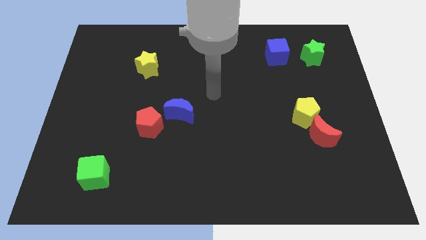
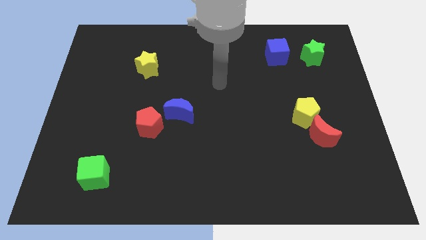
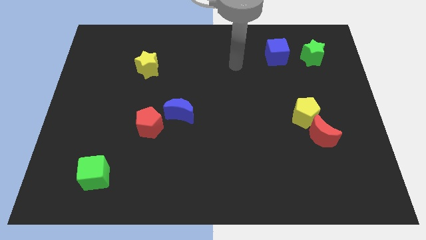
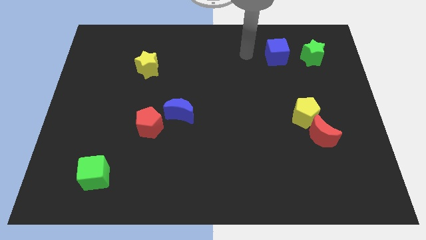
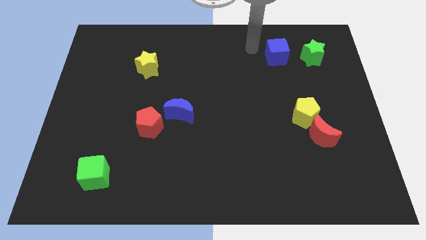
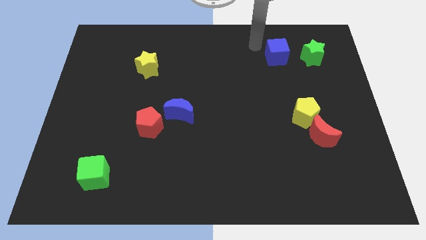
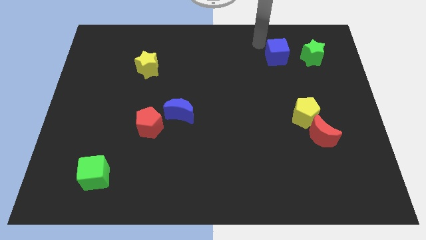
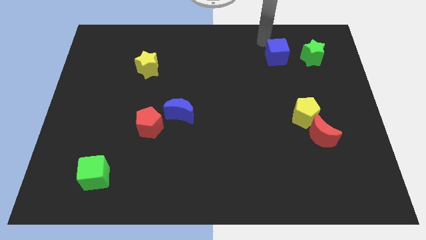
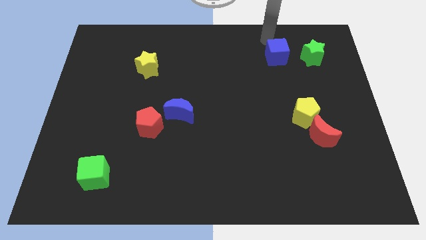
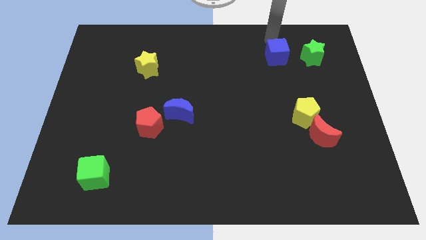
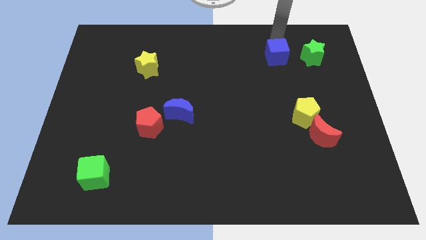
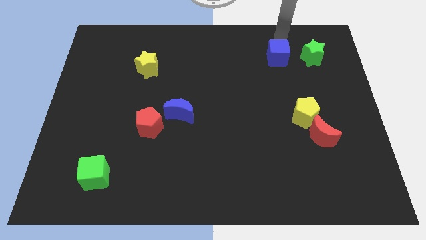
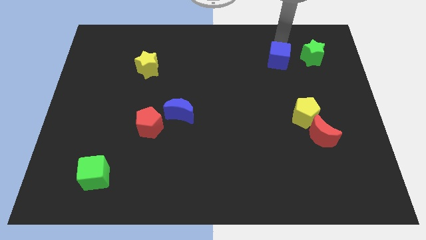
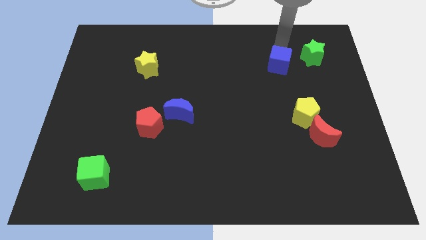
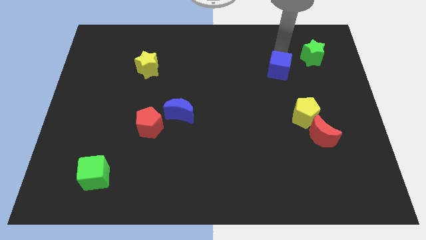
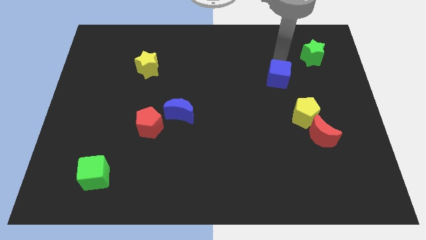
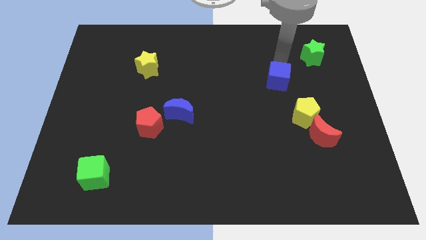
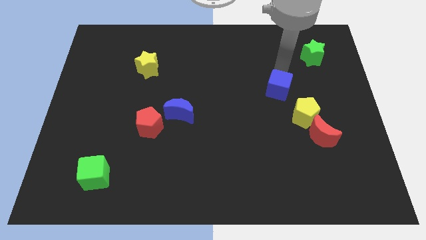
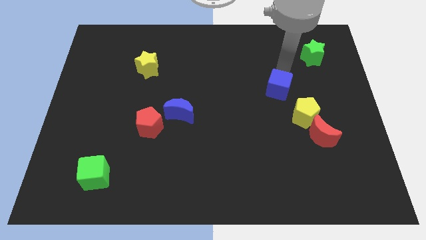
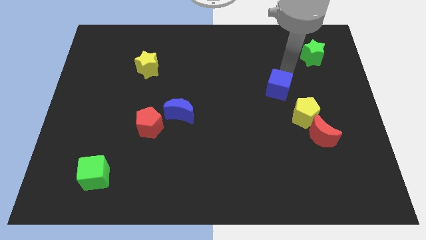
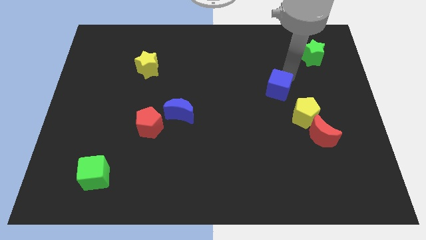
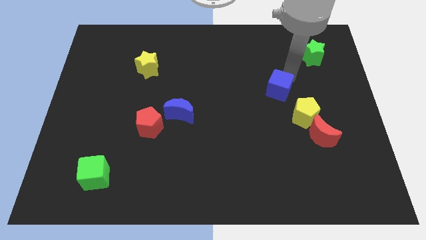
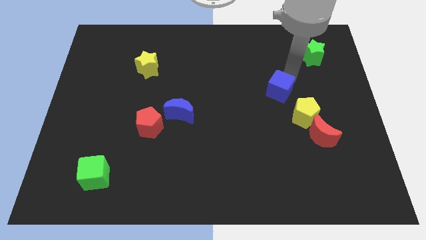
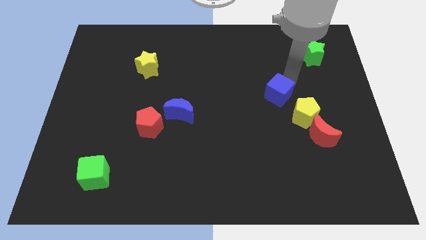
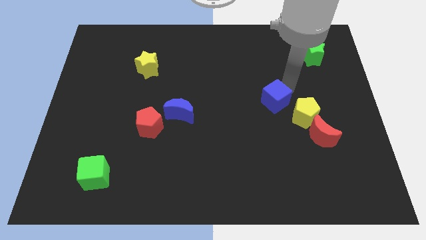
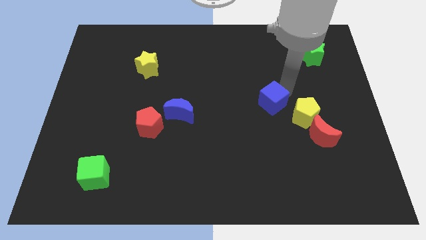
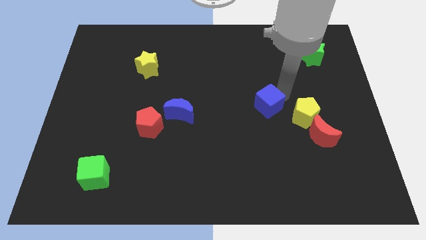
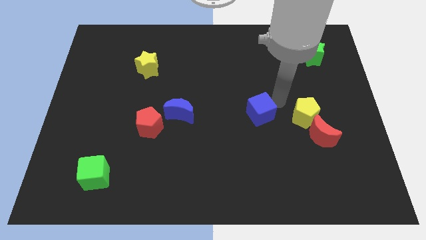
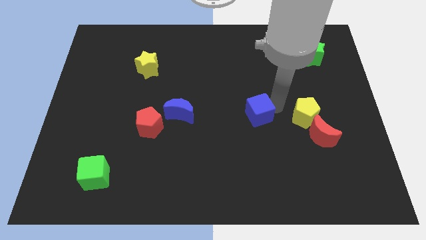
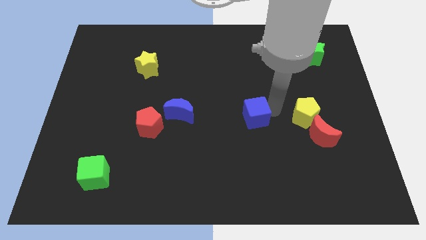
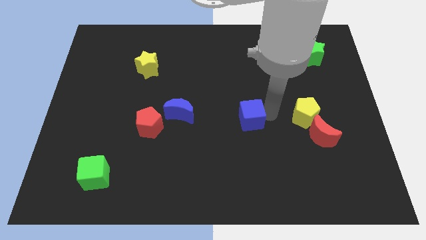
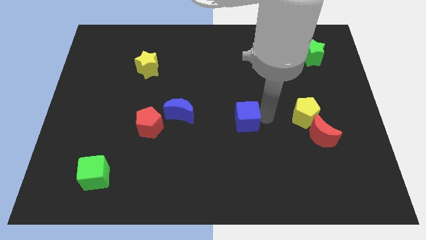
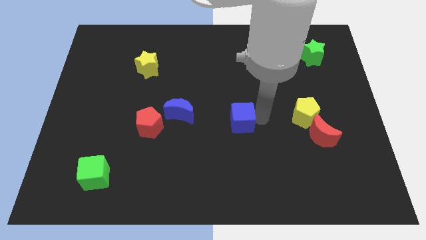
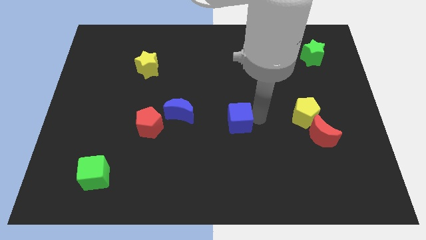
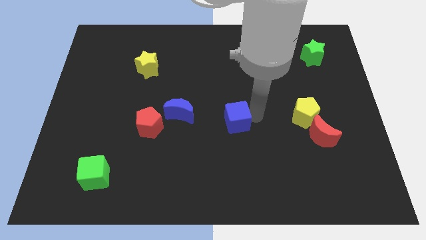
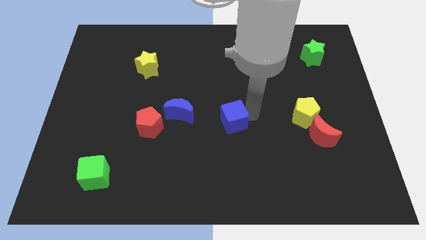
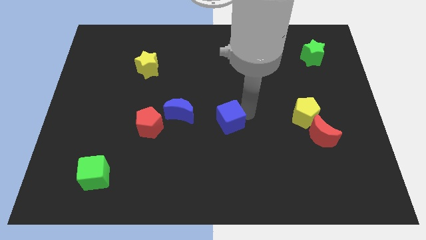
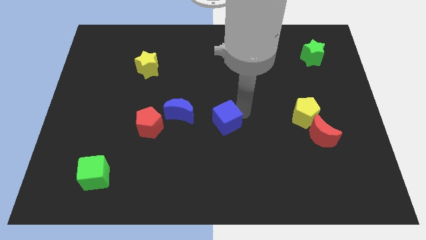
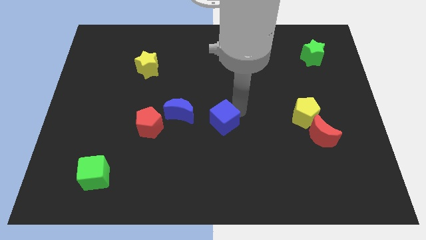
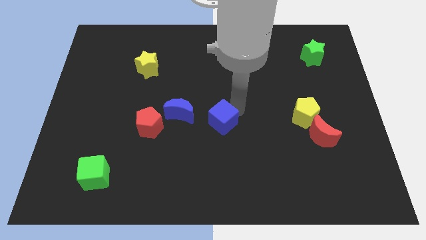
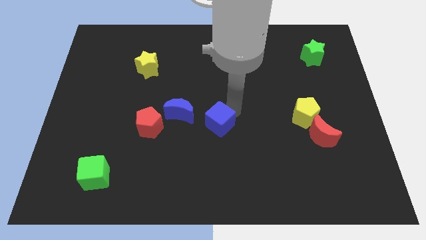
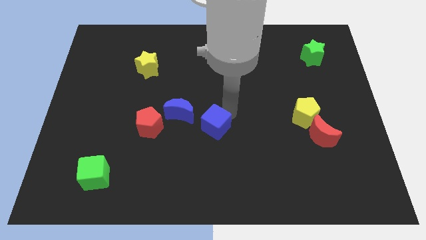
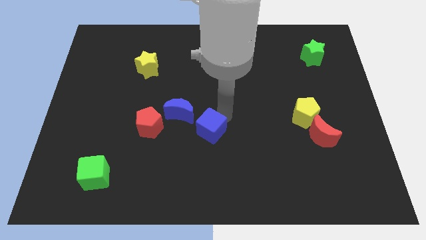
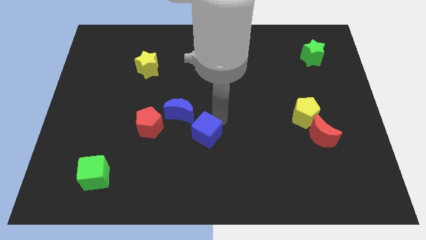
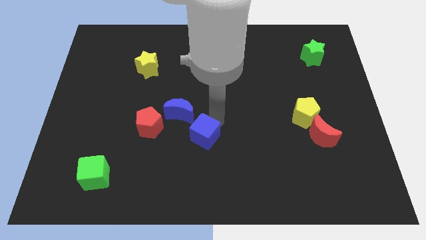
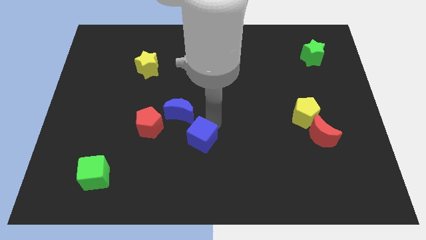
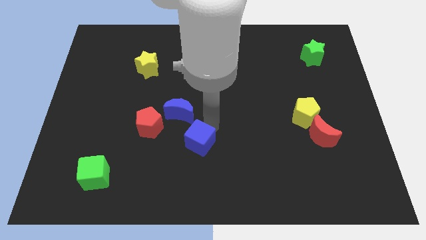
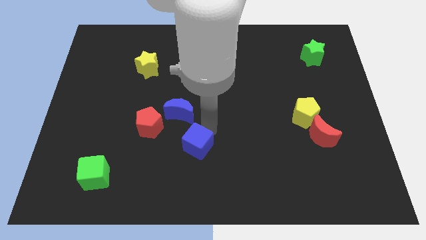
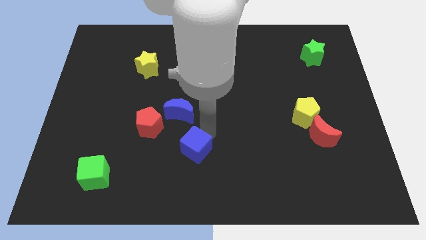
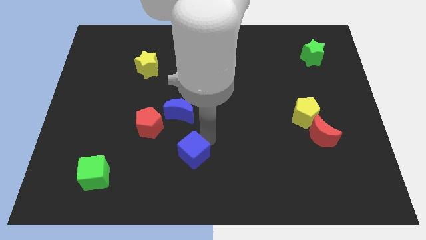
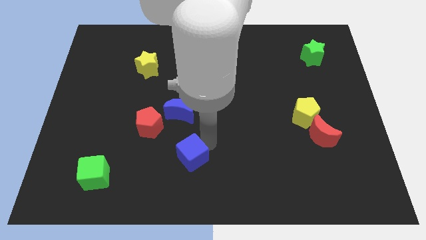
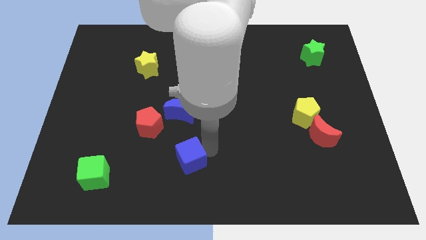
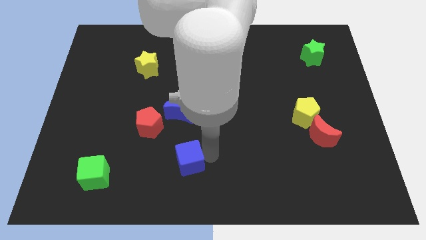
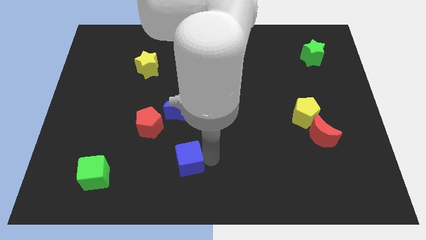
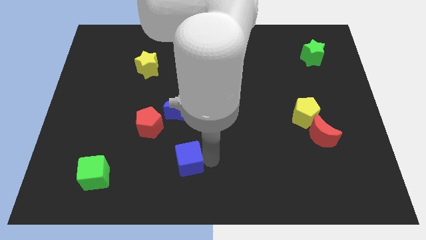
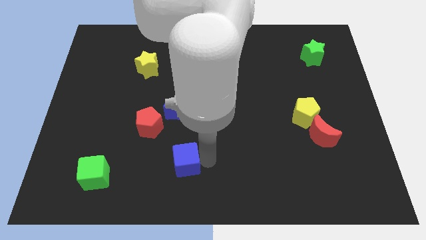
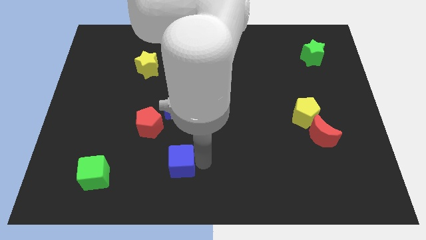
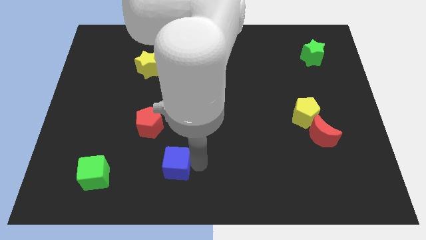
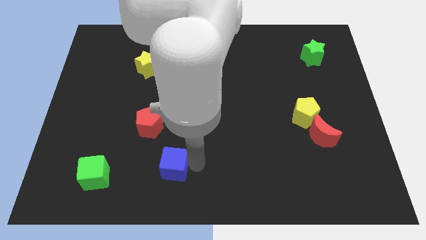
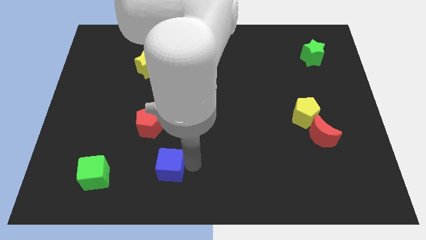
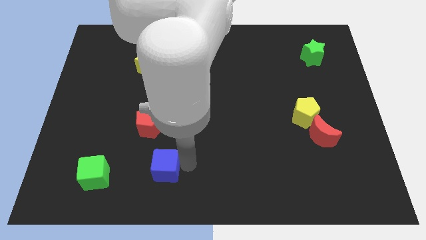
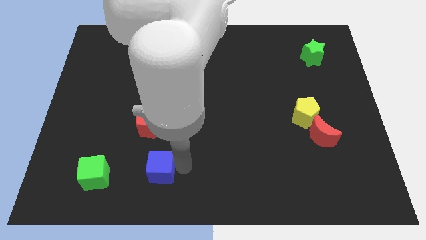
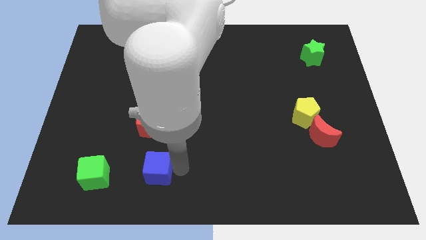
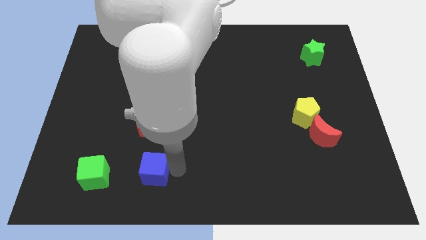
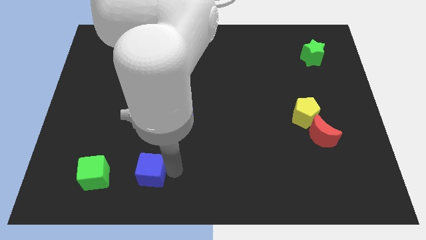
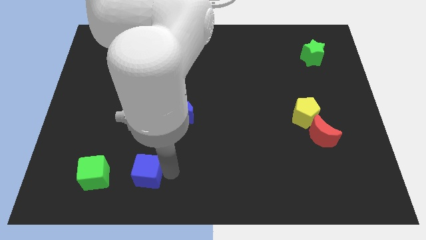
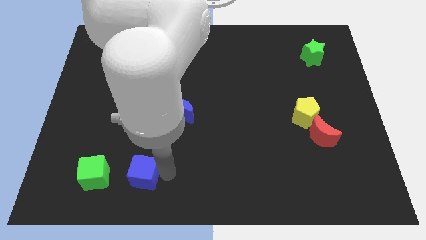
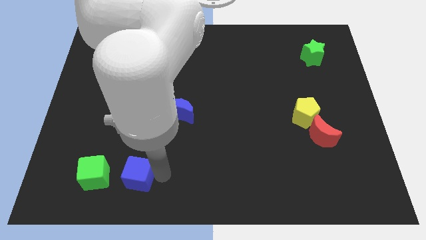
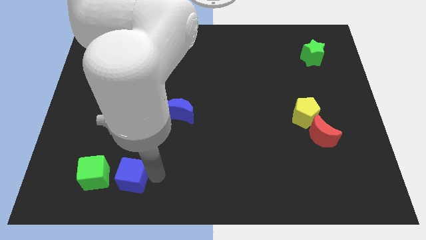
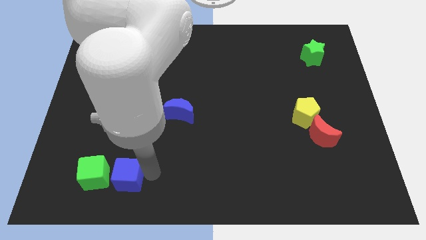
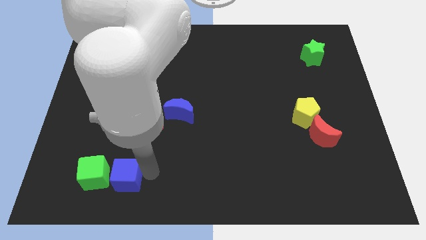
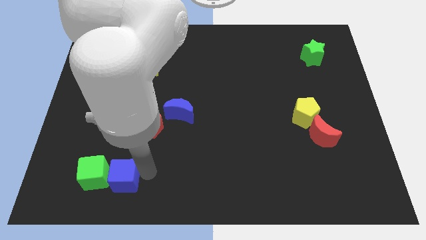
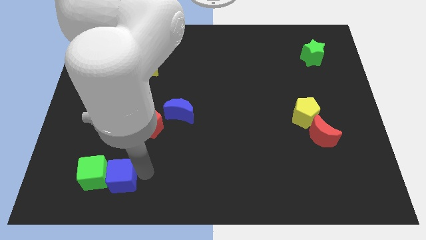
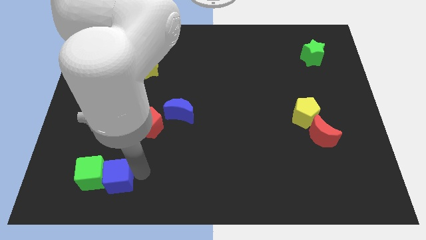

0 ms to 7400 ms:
move the blue cube to the green cube

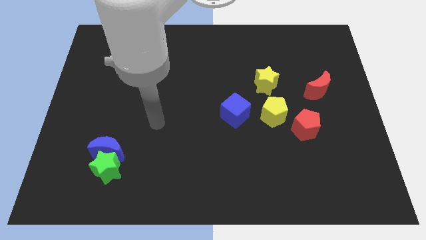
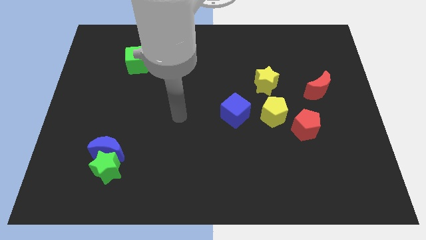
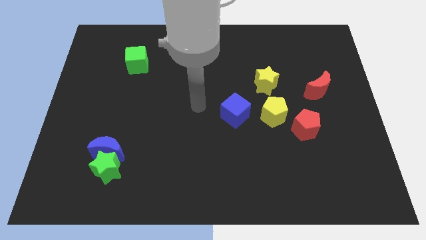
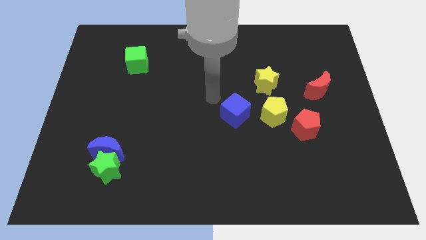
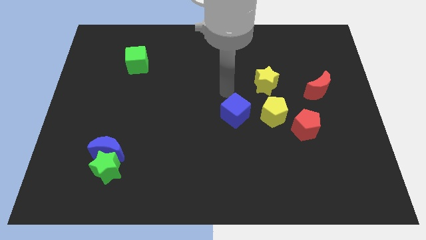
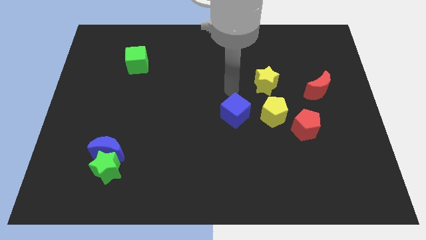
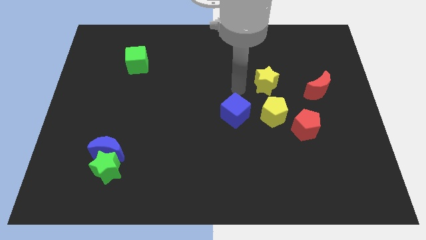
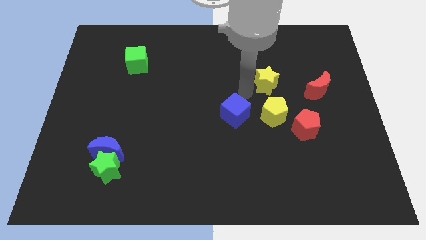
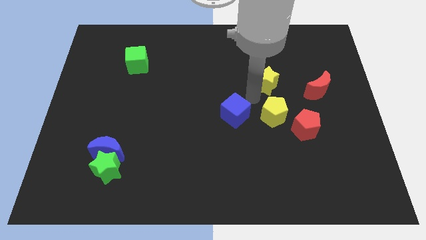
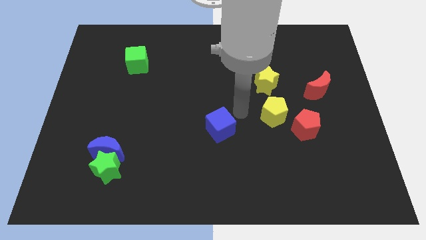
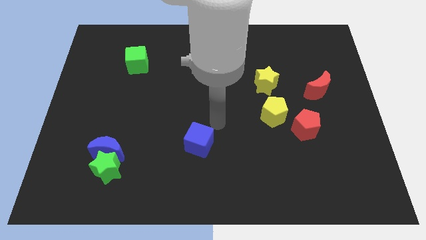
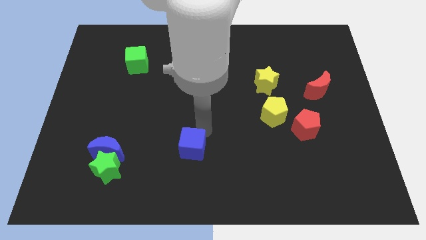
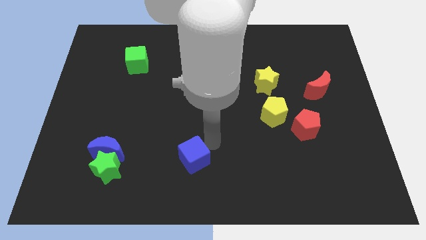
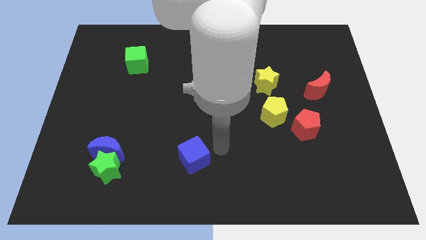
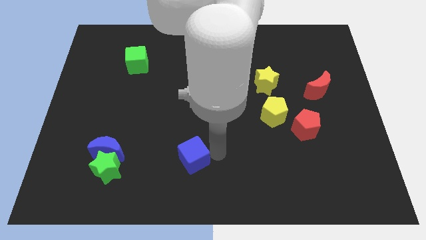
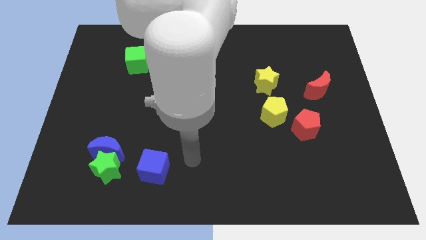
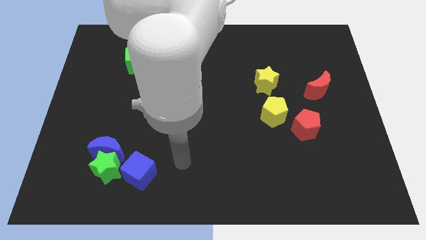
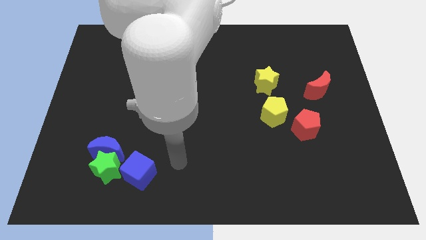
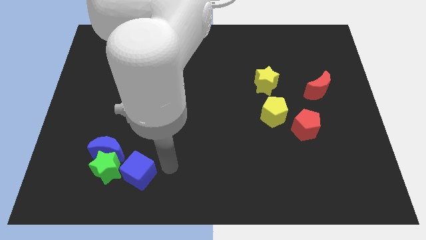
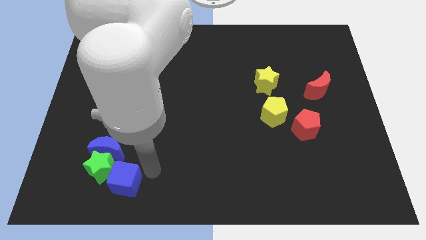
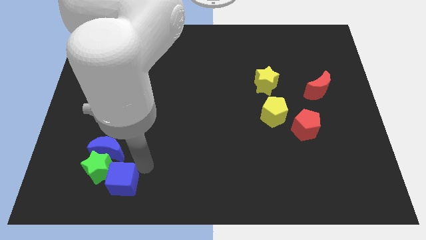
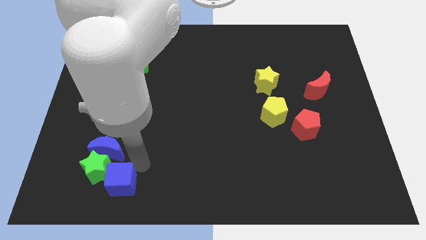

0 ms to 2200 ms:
push the blue cube close to the green star
